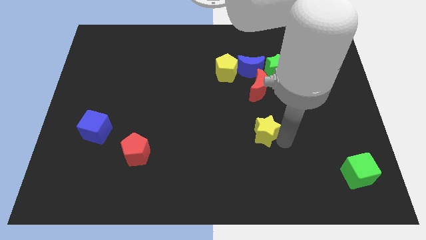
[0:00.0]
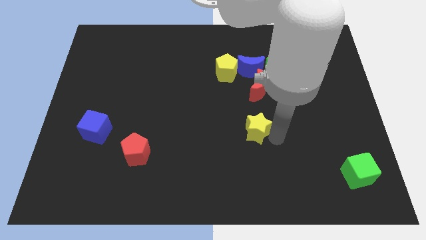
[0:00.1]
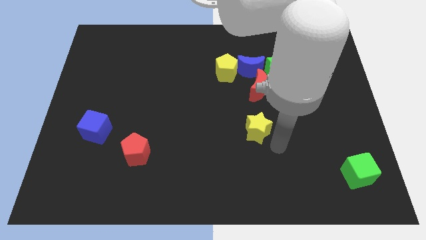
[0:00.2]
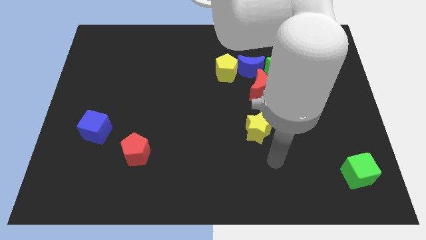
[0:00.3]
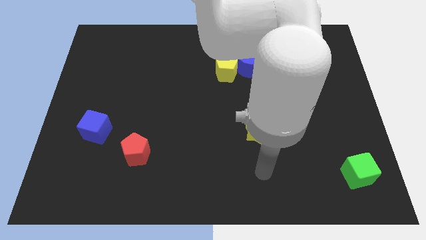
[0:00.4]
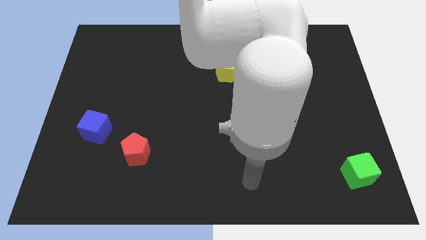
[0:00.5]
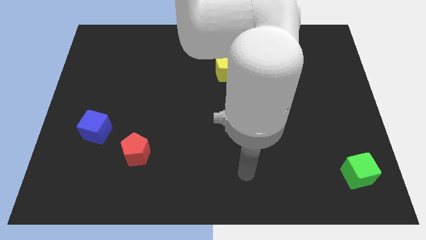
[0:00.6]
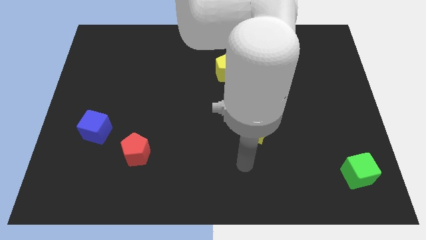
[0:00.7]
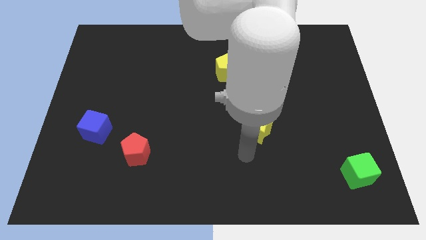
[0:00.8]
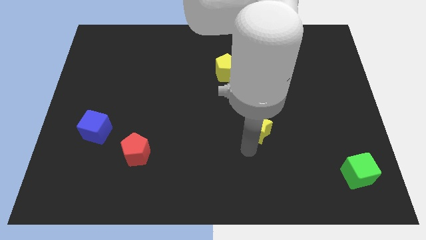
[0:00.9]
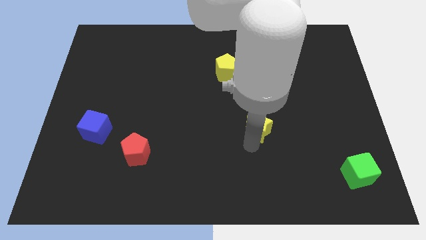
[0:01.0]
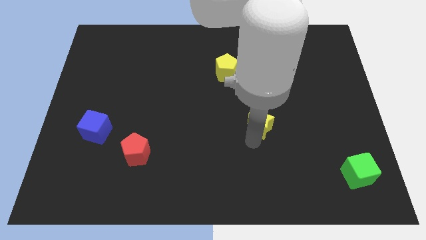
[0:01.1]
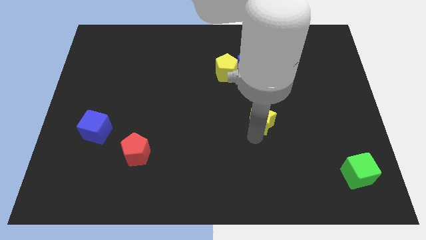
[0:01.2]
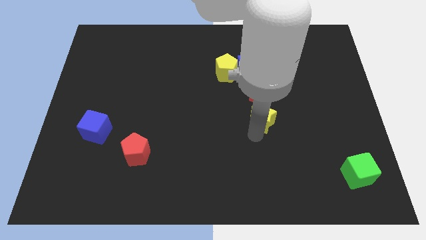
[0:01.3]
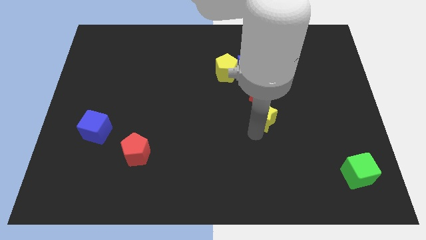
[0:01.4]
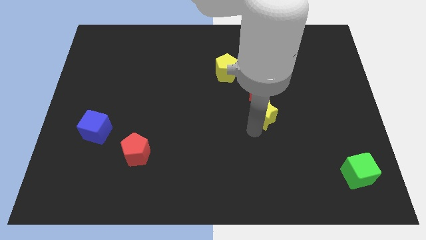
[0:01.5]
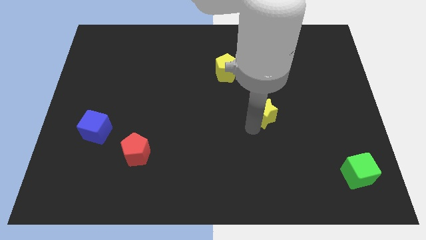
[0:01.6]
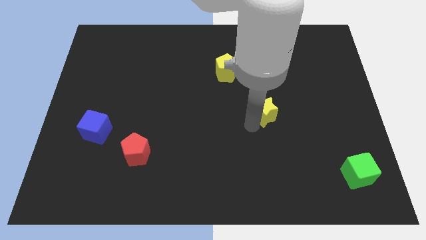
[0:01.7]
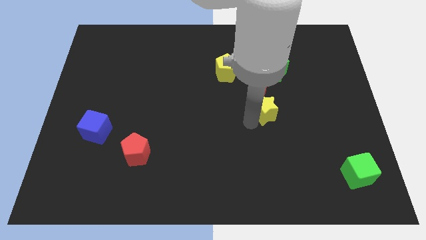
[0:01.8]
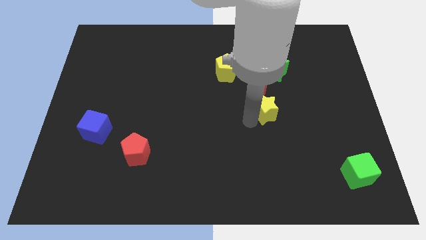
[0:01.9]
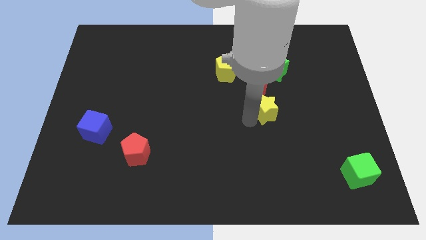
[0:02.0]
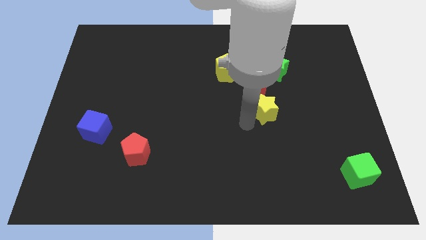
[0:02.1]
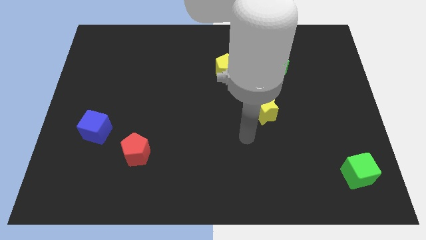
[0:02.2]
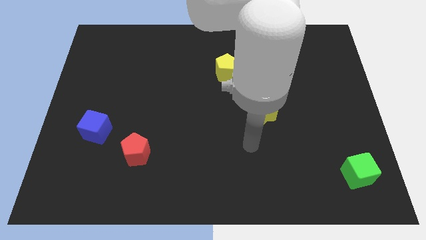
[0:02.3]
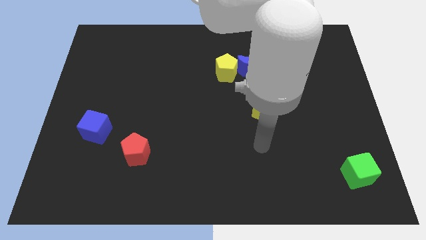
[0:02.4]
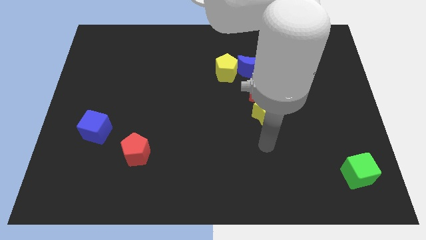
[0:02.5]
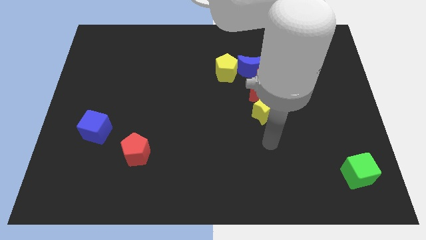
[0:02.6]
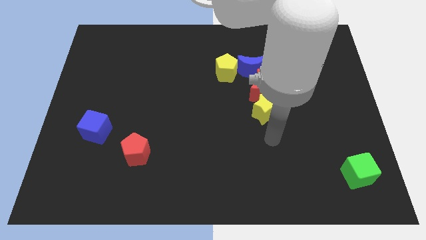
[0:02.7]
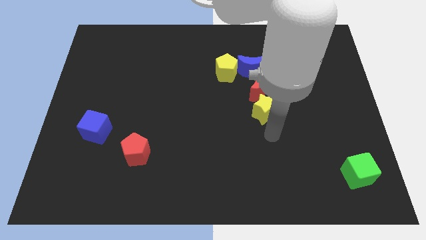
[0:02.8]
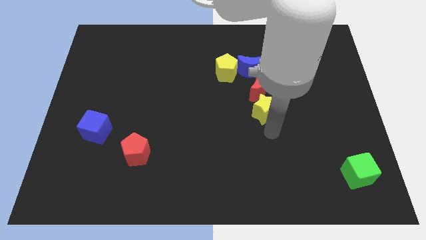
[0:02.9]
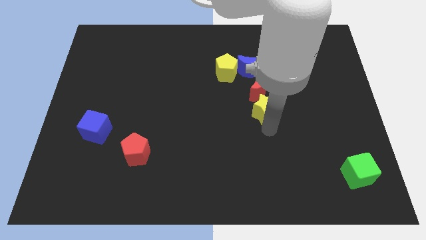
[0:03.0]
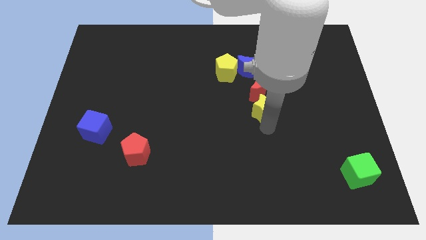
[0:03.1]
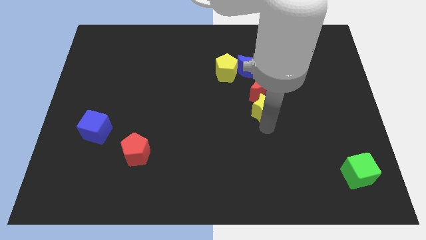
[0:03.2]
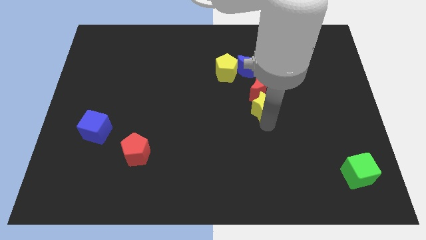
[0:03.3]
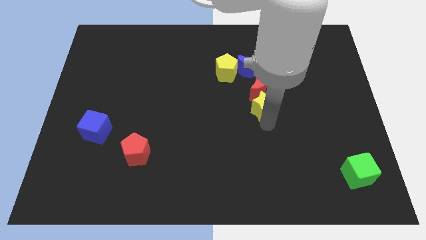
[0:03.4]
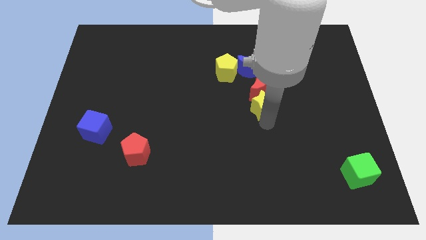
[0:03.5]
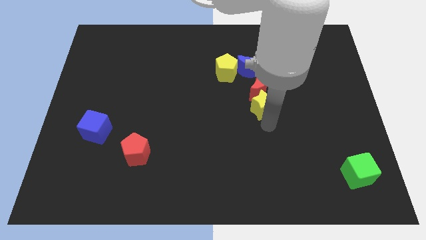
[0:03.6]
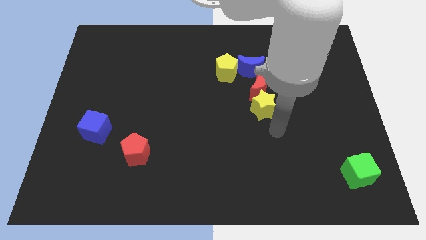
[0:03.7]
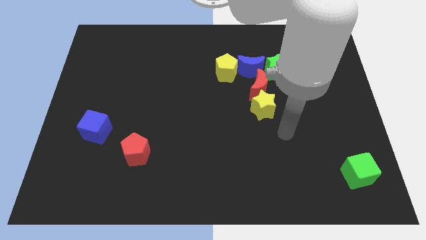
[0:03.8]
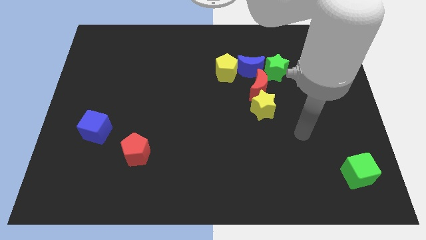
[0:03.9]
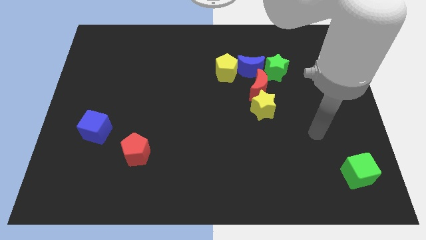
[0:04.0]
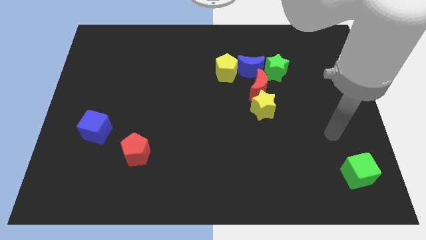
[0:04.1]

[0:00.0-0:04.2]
place the yellow star to the bottom of the red moon

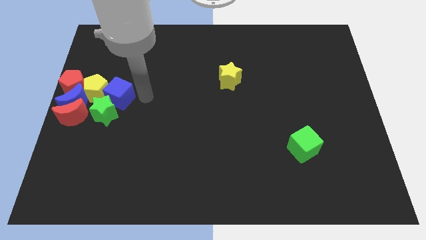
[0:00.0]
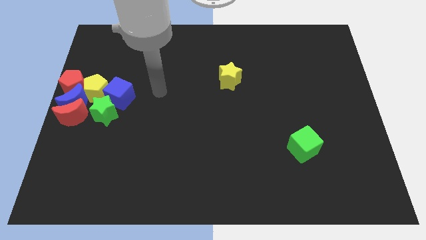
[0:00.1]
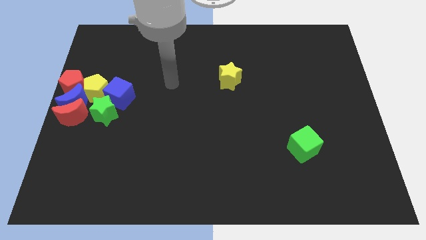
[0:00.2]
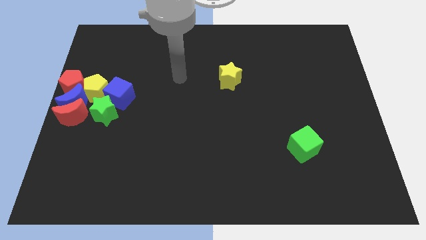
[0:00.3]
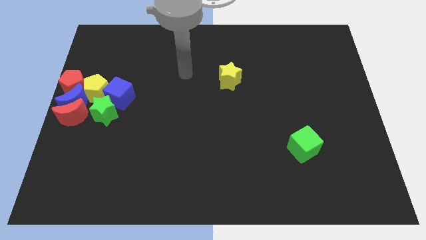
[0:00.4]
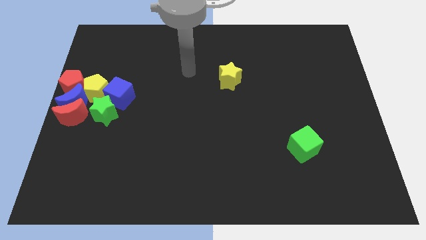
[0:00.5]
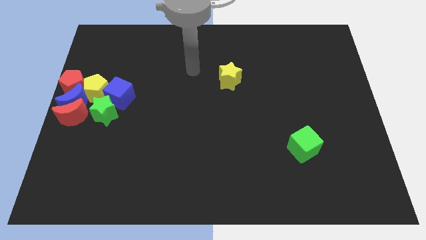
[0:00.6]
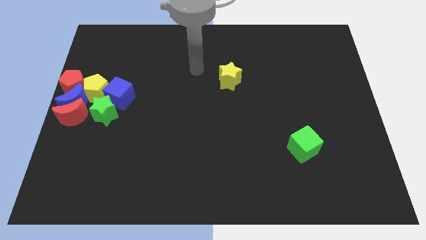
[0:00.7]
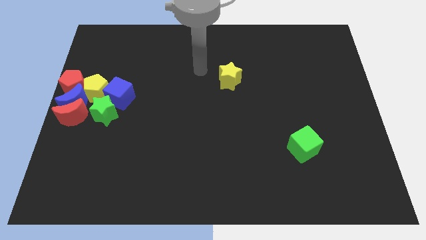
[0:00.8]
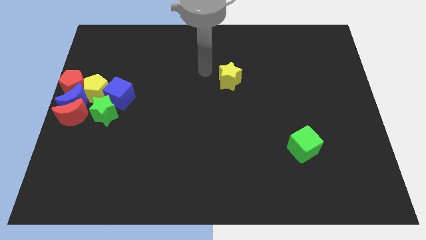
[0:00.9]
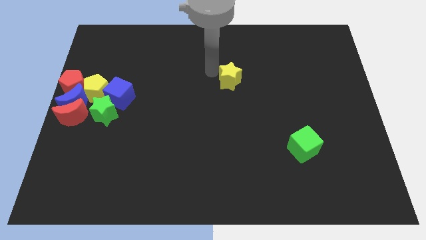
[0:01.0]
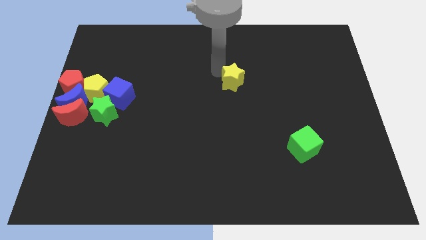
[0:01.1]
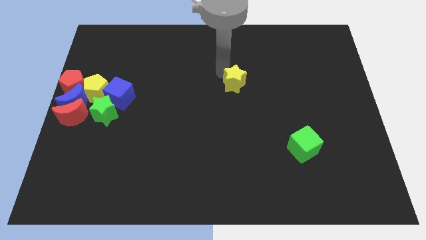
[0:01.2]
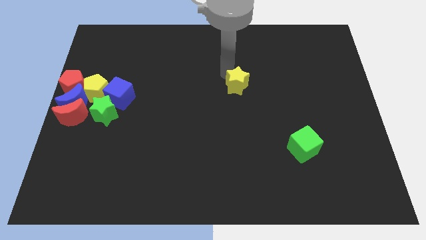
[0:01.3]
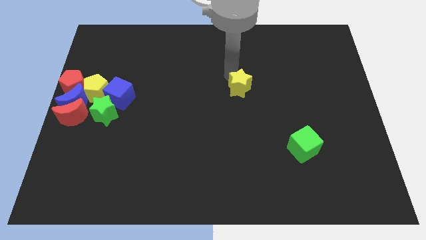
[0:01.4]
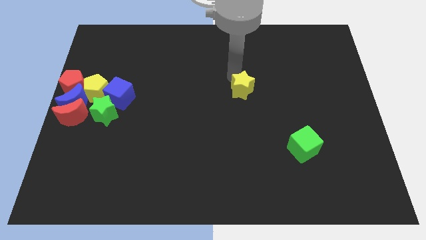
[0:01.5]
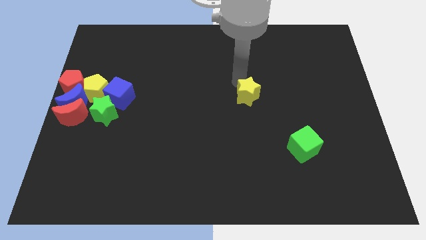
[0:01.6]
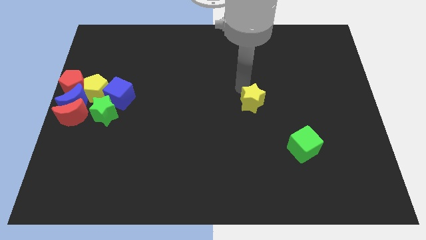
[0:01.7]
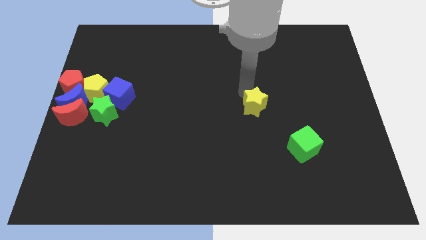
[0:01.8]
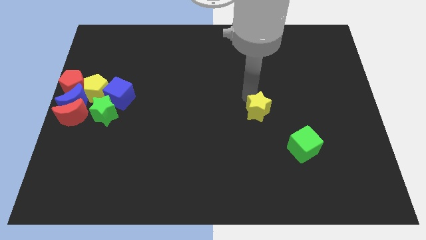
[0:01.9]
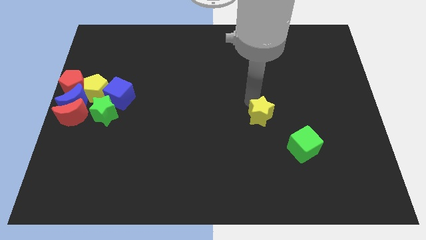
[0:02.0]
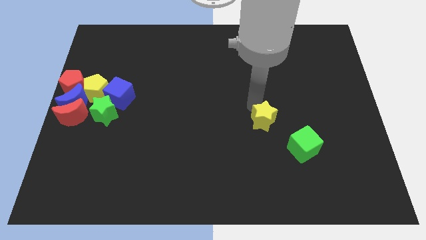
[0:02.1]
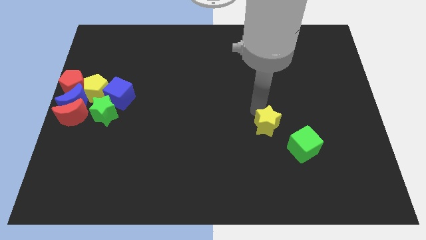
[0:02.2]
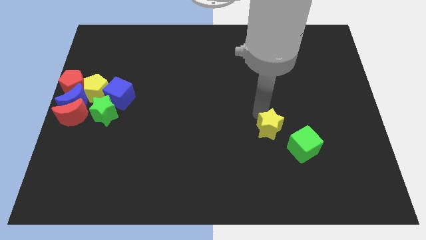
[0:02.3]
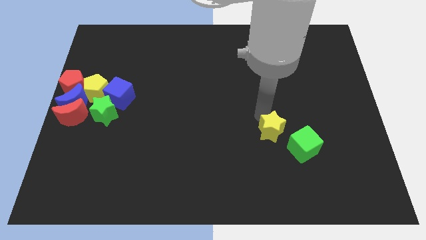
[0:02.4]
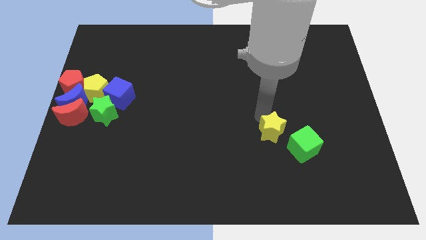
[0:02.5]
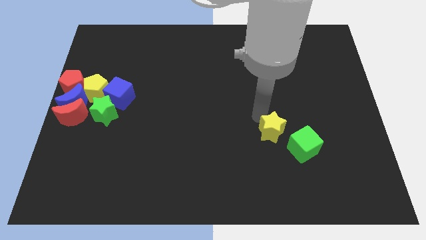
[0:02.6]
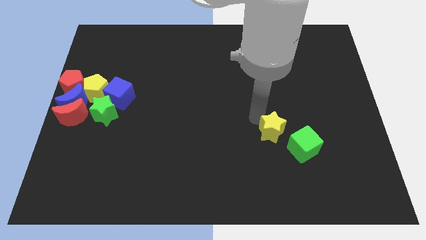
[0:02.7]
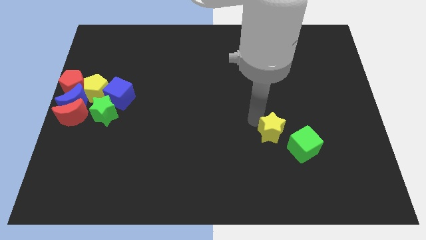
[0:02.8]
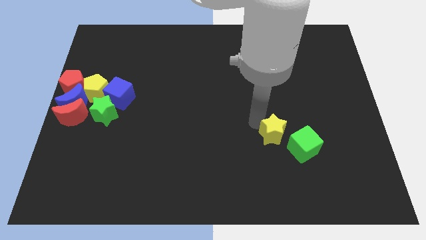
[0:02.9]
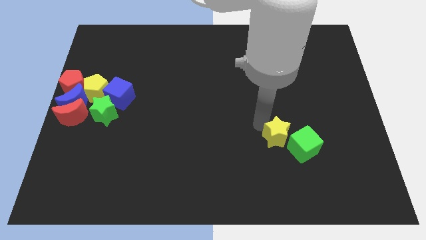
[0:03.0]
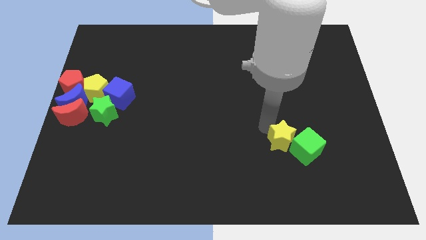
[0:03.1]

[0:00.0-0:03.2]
put the yellow star to the top left side of the green cube

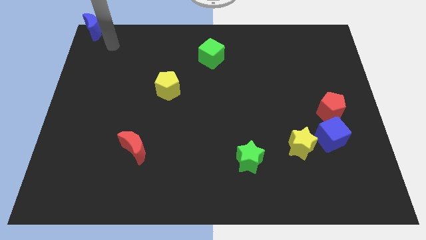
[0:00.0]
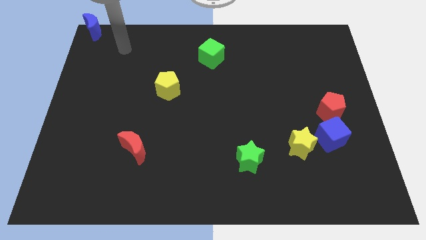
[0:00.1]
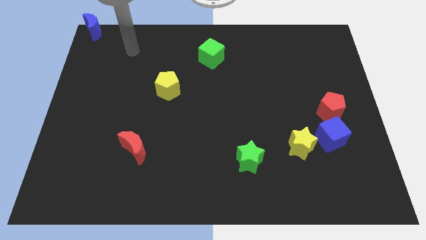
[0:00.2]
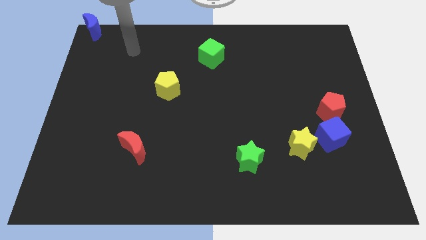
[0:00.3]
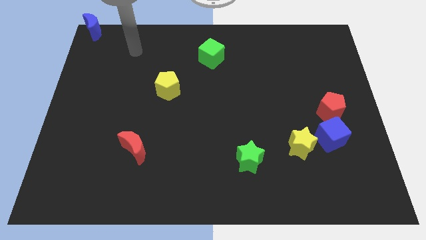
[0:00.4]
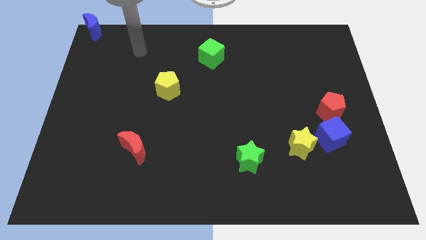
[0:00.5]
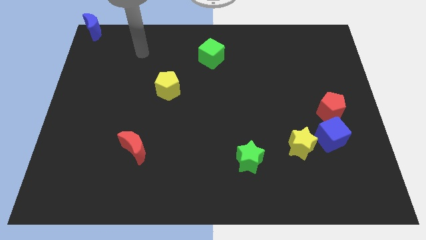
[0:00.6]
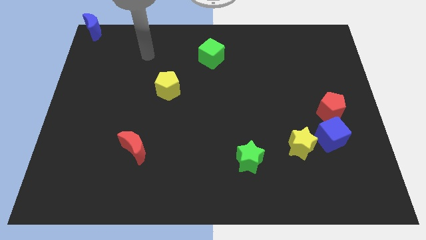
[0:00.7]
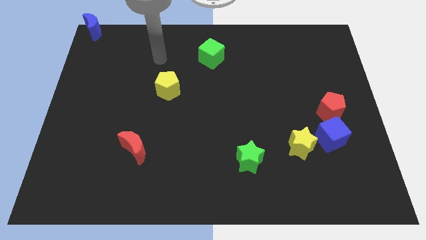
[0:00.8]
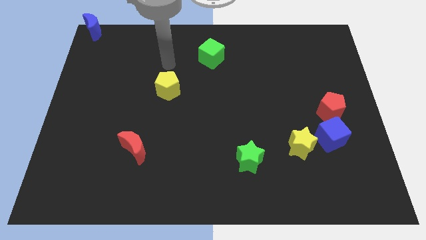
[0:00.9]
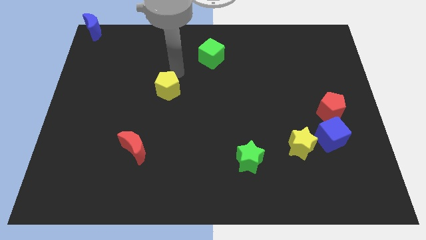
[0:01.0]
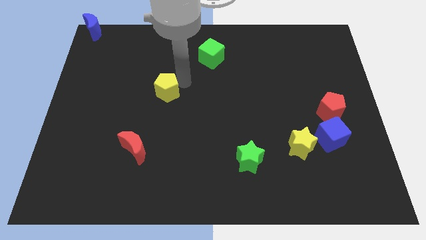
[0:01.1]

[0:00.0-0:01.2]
tap the top side of the yellow pentagon

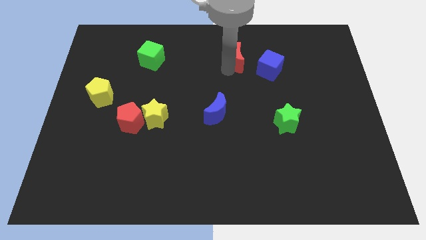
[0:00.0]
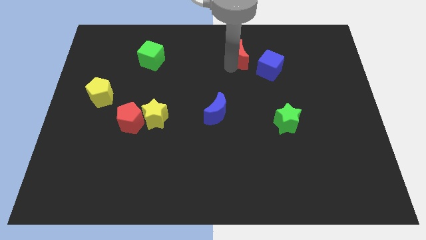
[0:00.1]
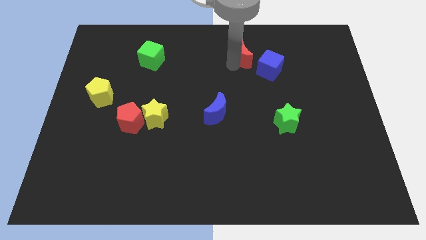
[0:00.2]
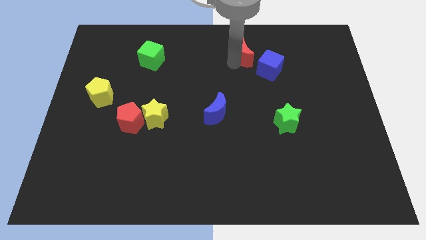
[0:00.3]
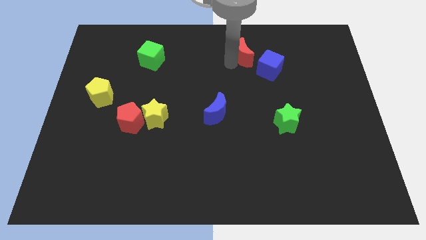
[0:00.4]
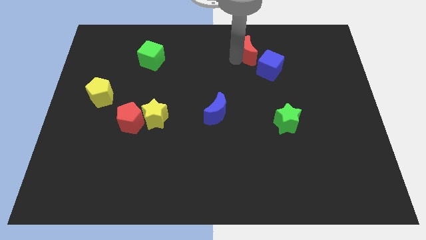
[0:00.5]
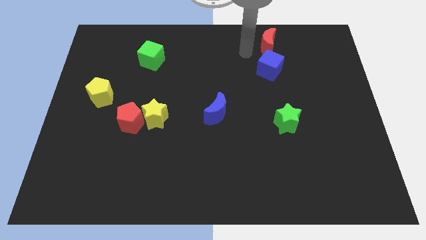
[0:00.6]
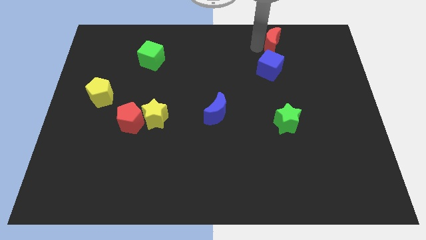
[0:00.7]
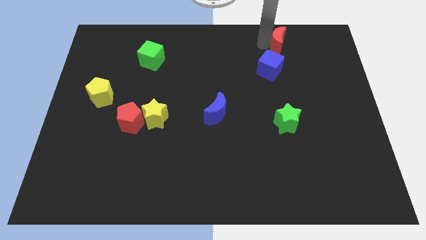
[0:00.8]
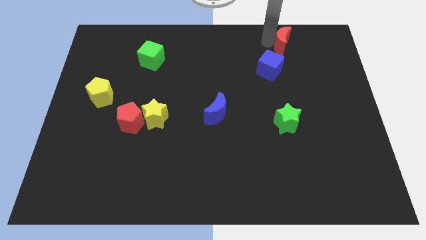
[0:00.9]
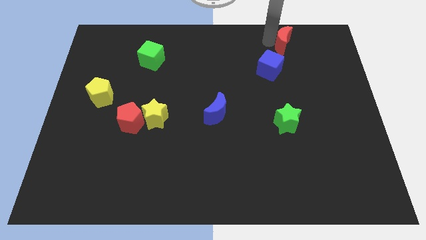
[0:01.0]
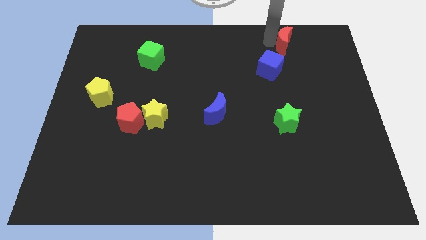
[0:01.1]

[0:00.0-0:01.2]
place the red moon above the blue cube
